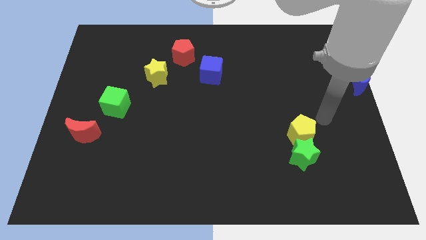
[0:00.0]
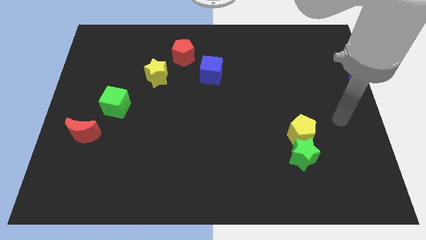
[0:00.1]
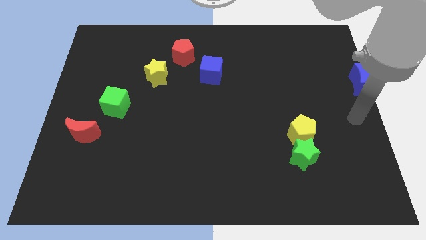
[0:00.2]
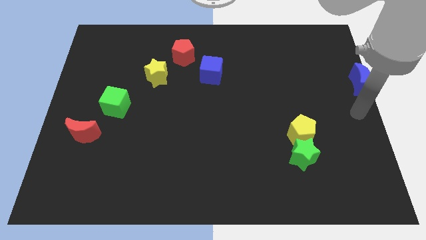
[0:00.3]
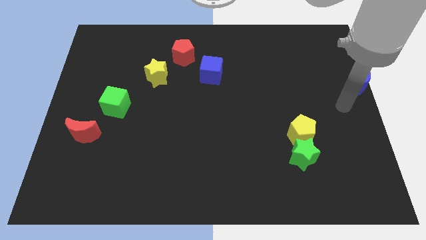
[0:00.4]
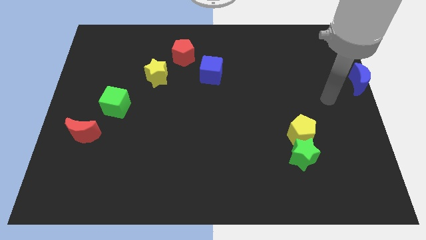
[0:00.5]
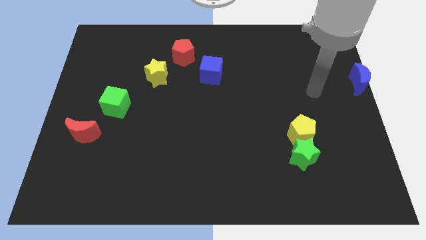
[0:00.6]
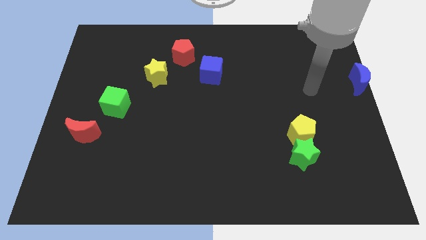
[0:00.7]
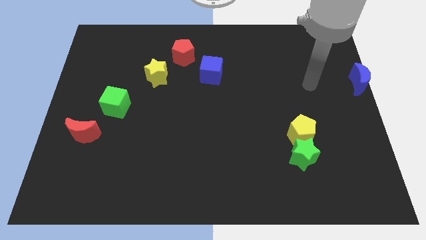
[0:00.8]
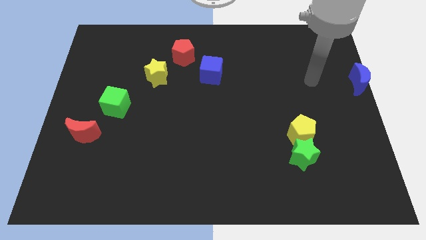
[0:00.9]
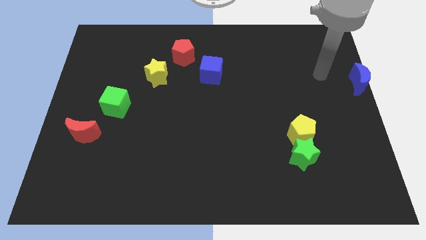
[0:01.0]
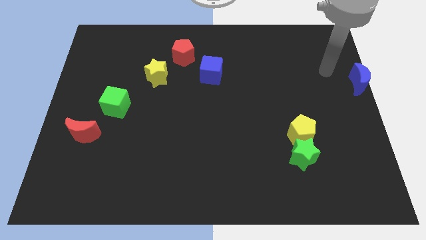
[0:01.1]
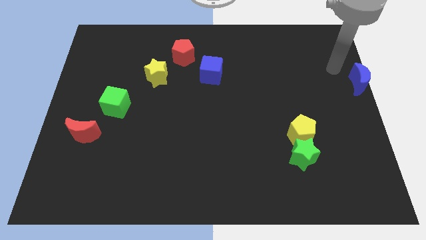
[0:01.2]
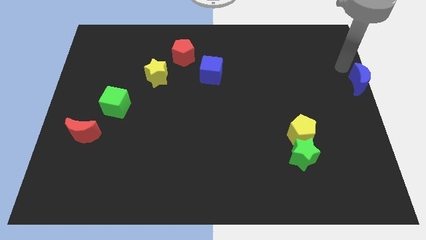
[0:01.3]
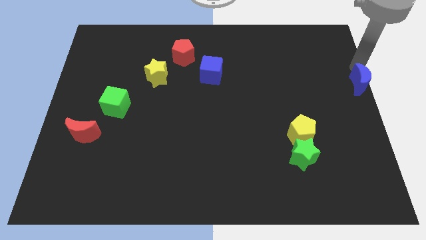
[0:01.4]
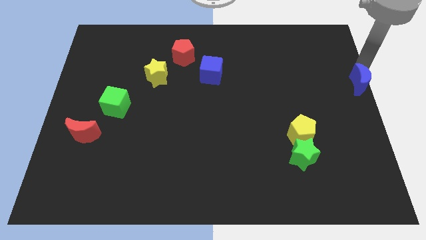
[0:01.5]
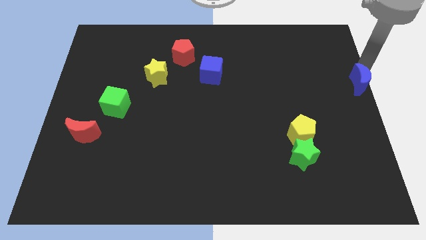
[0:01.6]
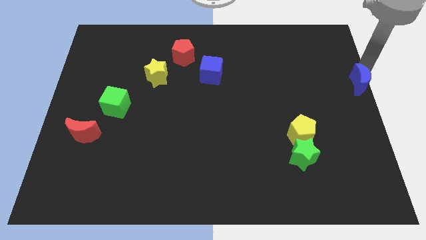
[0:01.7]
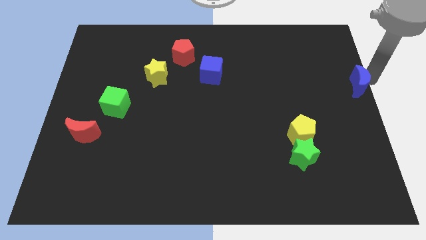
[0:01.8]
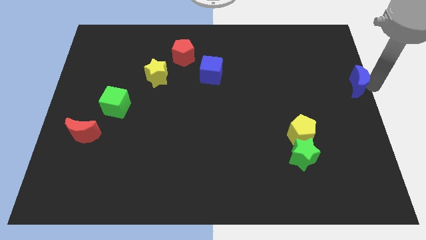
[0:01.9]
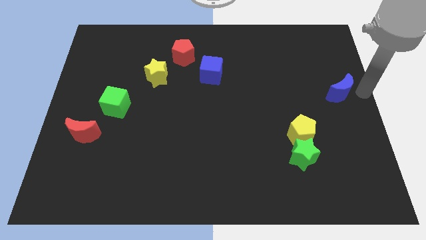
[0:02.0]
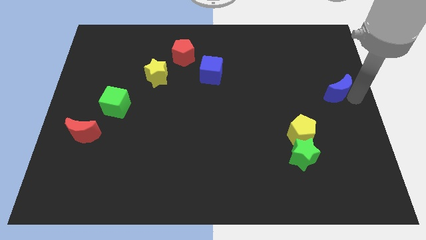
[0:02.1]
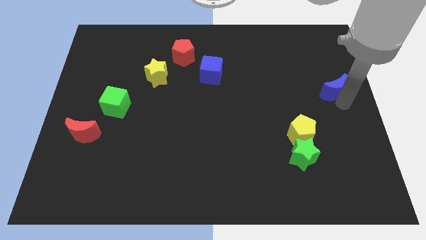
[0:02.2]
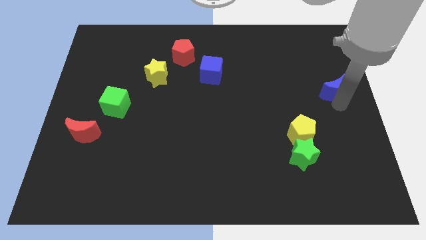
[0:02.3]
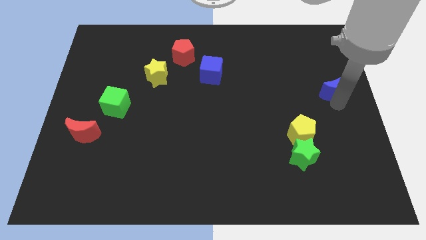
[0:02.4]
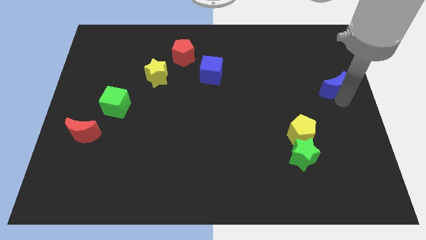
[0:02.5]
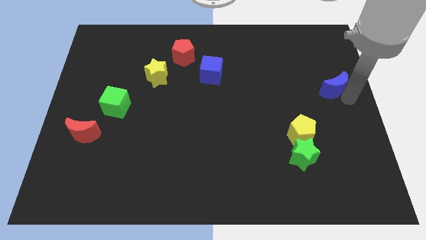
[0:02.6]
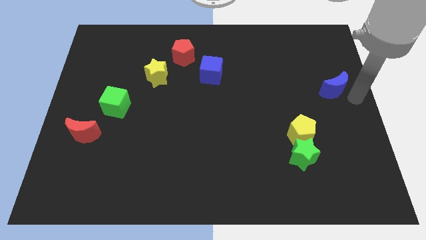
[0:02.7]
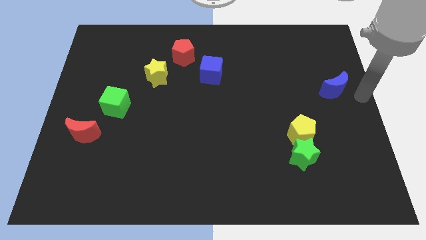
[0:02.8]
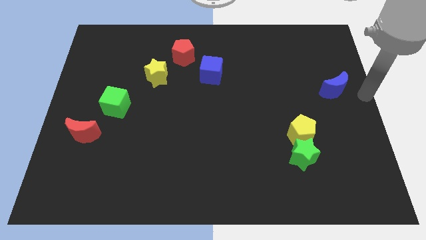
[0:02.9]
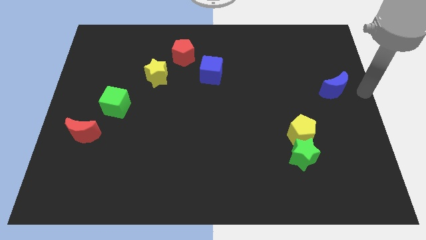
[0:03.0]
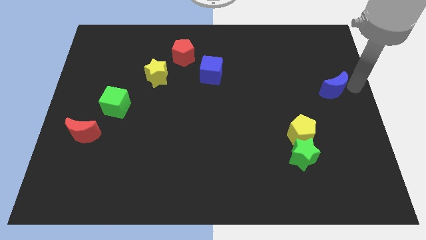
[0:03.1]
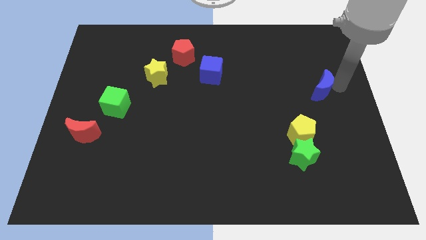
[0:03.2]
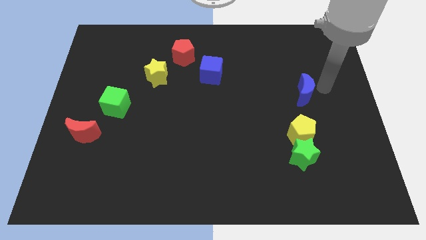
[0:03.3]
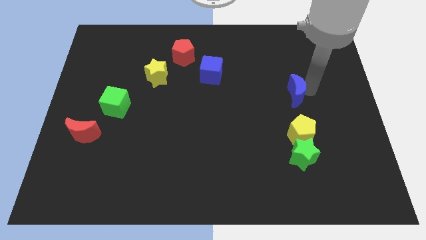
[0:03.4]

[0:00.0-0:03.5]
place the blue moon above the yellow pentagon

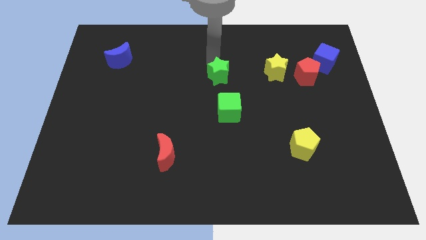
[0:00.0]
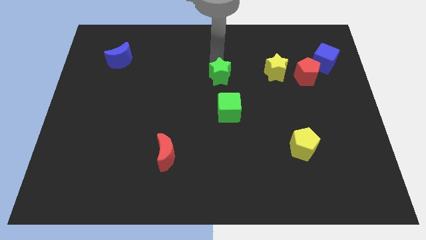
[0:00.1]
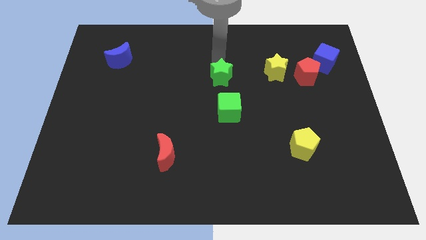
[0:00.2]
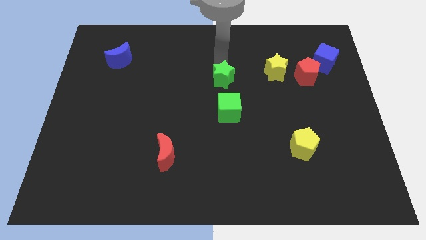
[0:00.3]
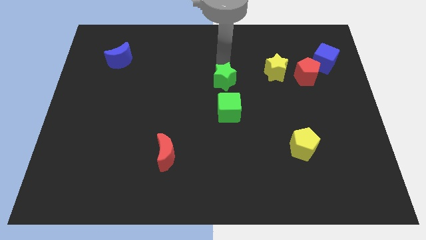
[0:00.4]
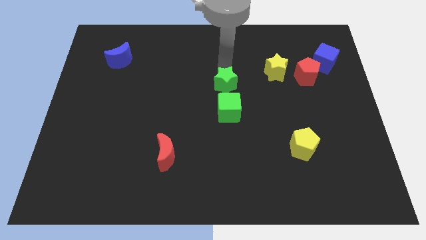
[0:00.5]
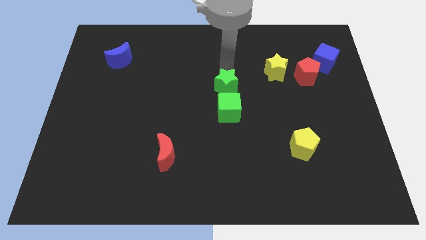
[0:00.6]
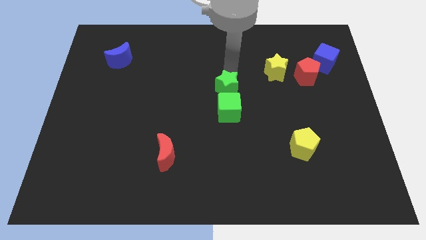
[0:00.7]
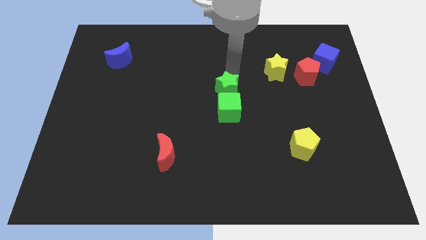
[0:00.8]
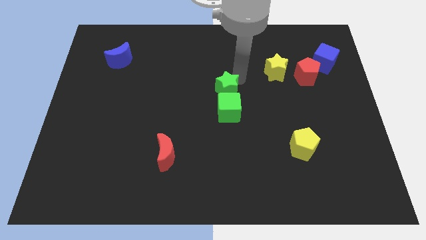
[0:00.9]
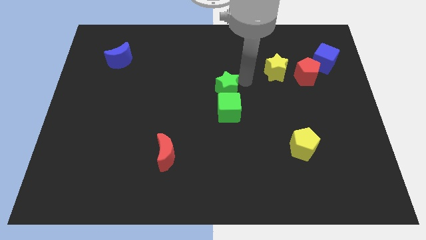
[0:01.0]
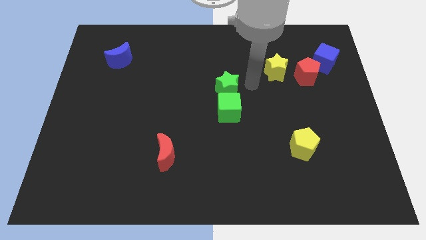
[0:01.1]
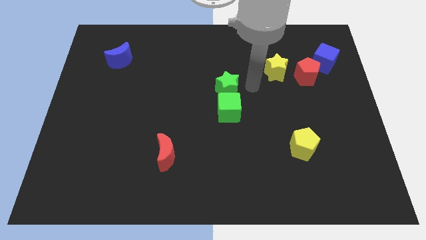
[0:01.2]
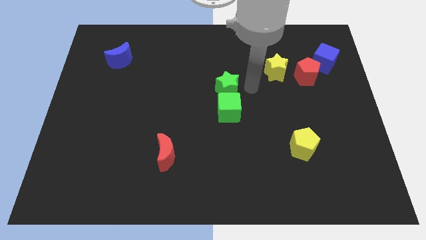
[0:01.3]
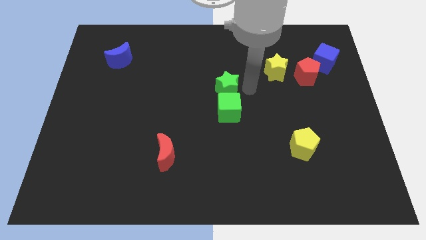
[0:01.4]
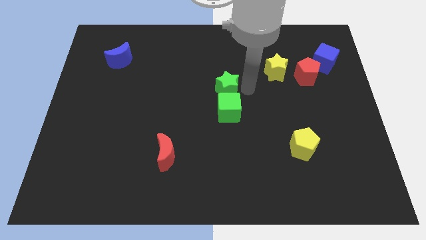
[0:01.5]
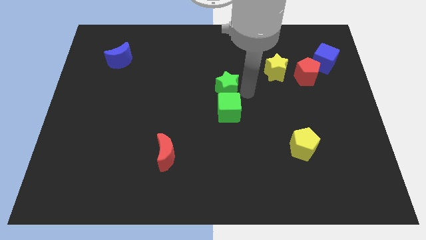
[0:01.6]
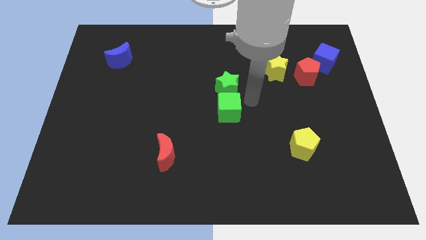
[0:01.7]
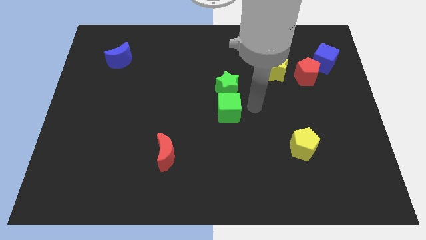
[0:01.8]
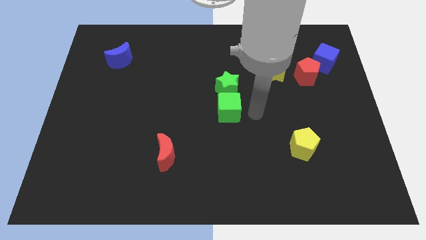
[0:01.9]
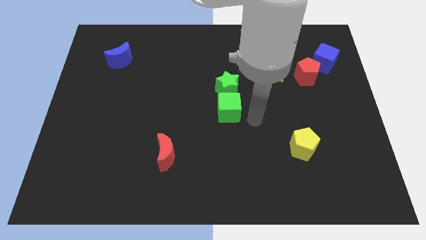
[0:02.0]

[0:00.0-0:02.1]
push the green star into the green cube

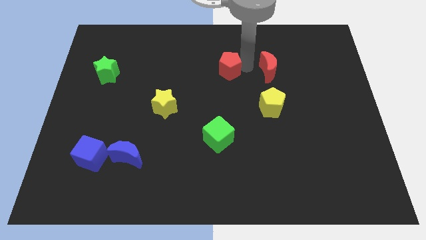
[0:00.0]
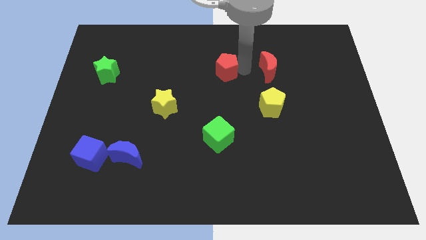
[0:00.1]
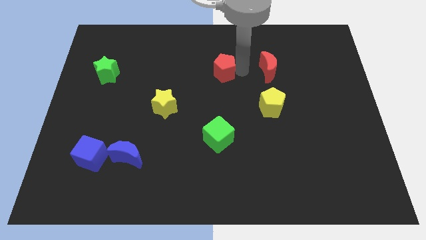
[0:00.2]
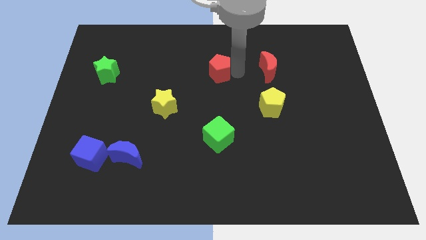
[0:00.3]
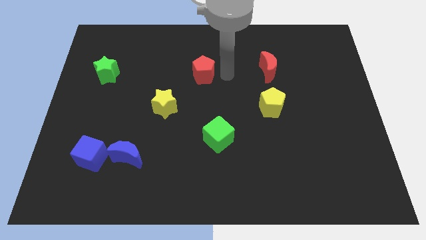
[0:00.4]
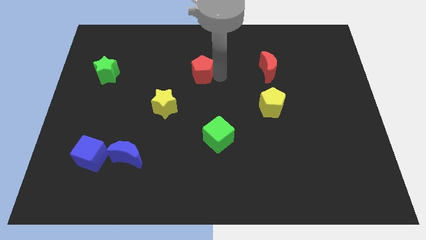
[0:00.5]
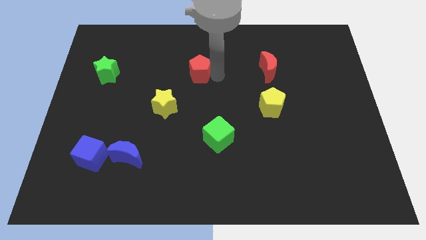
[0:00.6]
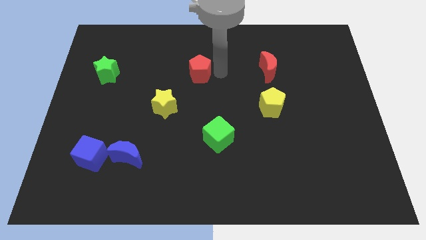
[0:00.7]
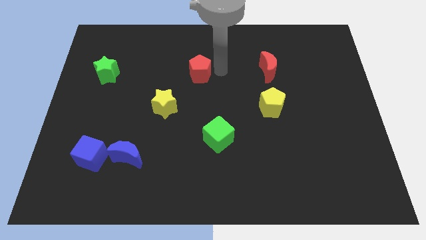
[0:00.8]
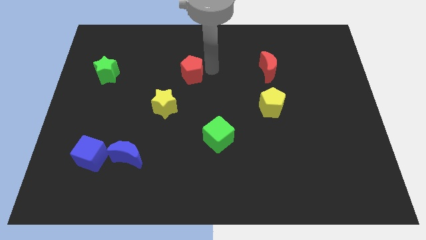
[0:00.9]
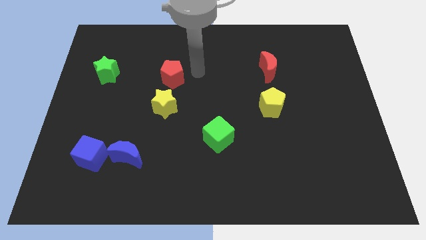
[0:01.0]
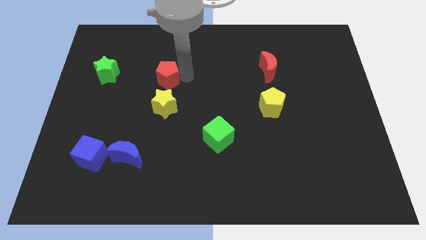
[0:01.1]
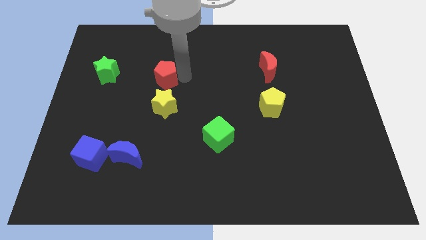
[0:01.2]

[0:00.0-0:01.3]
place the red pentagon above the yellow star

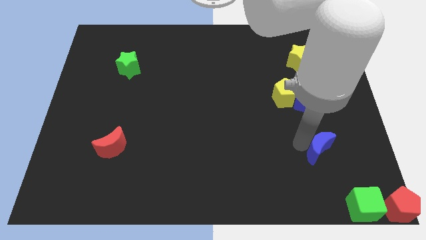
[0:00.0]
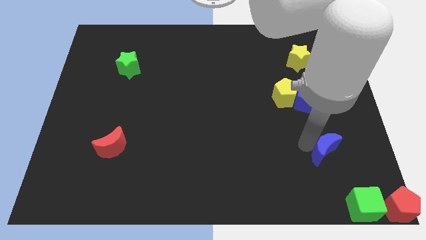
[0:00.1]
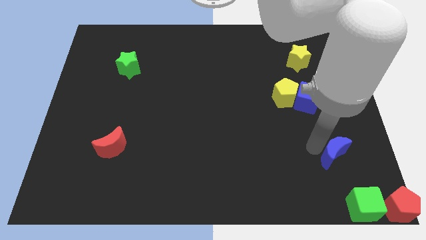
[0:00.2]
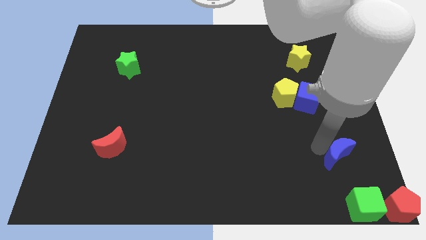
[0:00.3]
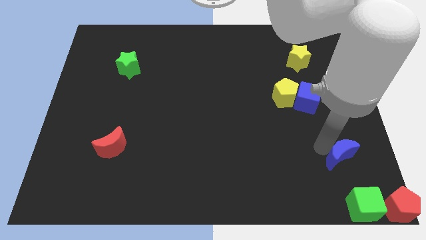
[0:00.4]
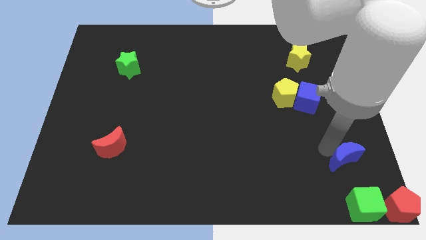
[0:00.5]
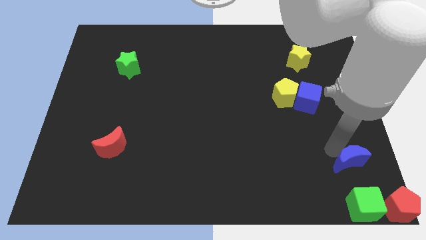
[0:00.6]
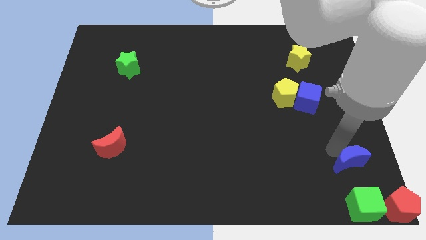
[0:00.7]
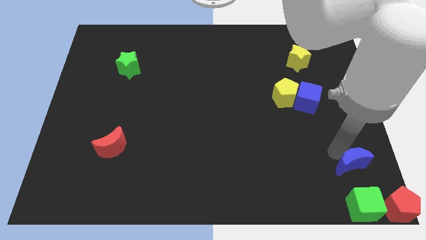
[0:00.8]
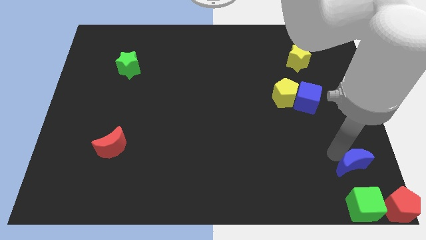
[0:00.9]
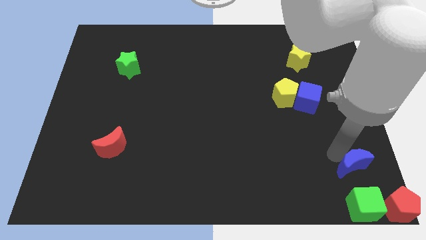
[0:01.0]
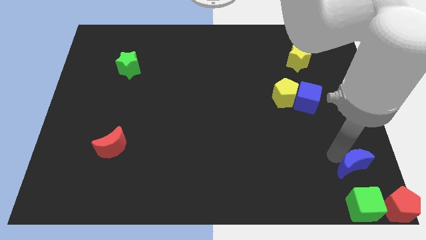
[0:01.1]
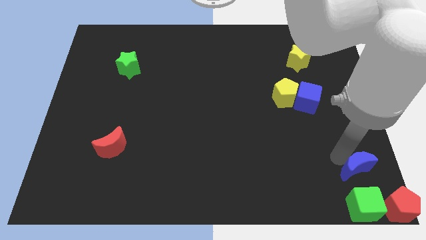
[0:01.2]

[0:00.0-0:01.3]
place the blue moon above the green cube

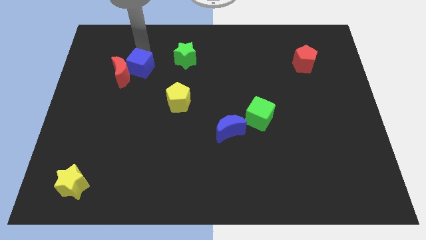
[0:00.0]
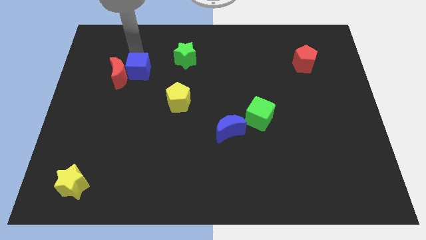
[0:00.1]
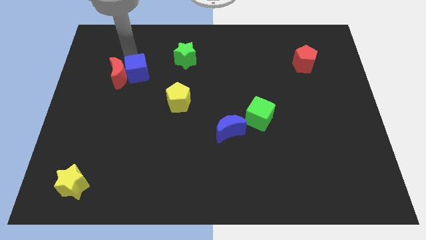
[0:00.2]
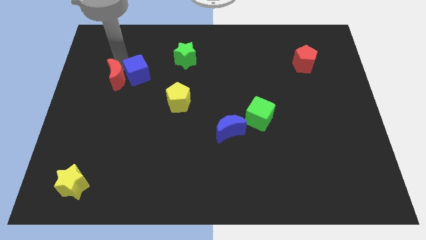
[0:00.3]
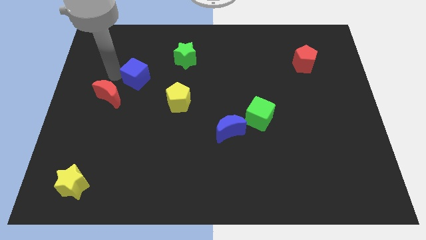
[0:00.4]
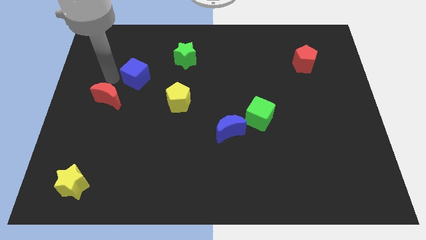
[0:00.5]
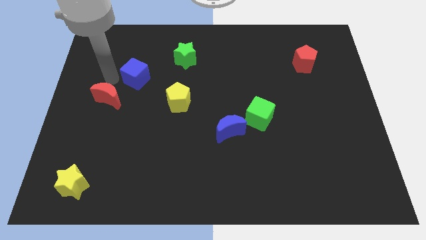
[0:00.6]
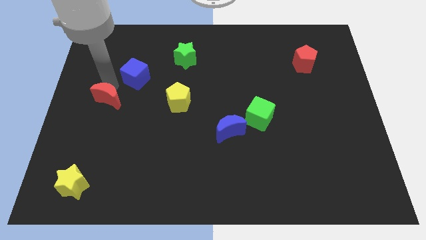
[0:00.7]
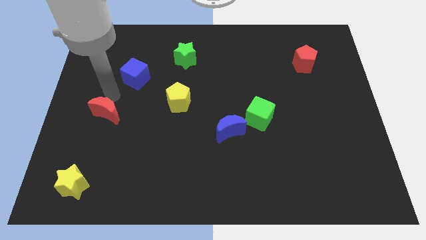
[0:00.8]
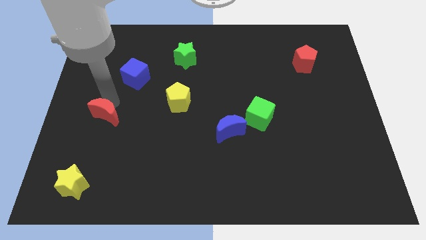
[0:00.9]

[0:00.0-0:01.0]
separate the red crescent from blue cube
